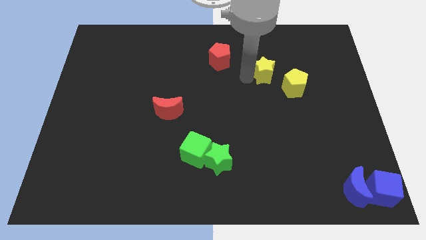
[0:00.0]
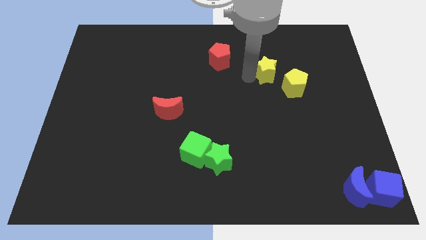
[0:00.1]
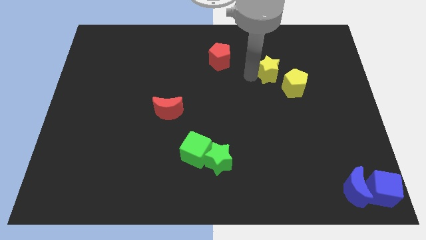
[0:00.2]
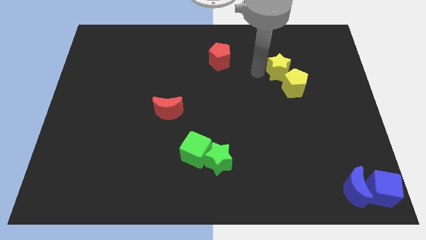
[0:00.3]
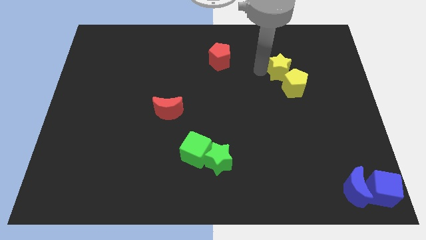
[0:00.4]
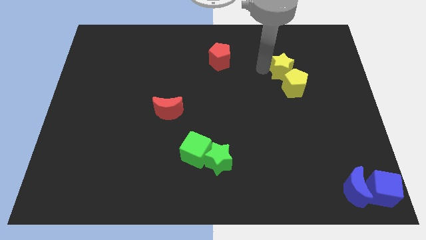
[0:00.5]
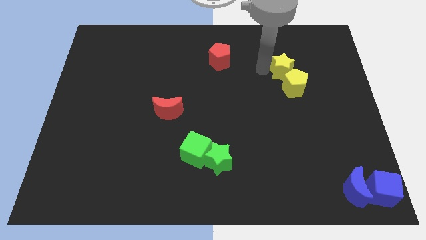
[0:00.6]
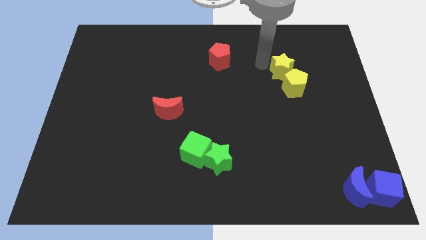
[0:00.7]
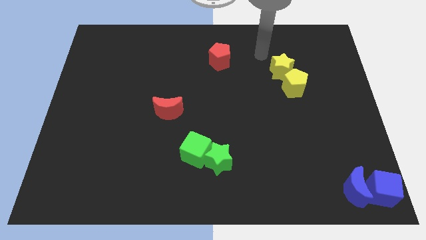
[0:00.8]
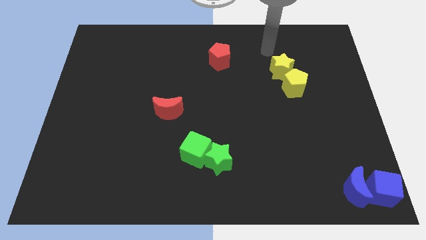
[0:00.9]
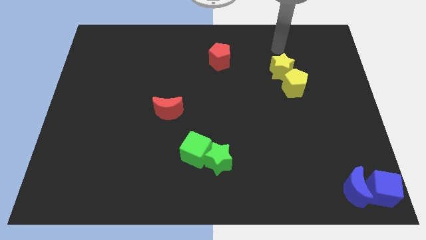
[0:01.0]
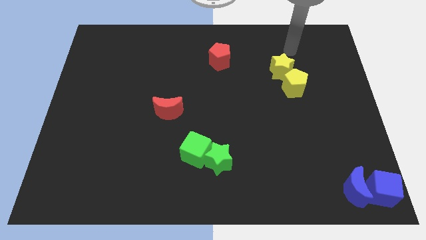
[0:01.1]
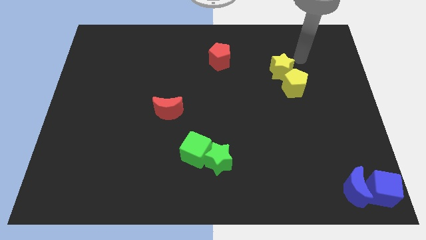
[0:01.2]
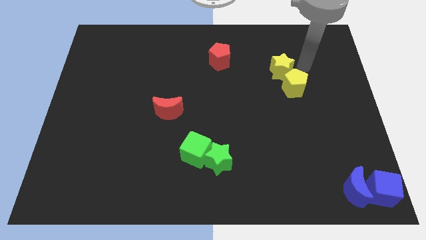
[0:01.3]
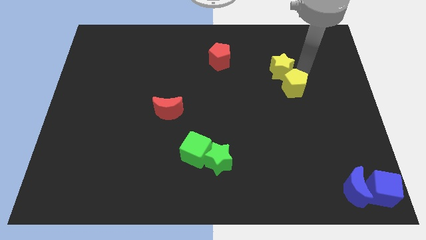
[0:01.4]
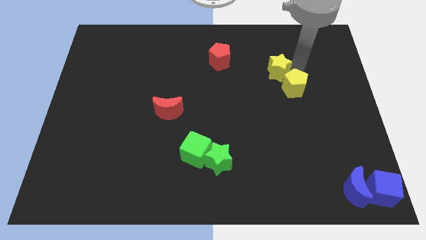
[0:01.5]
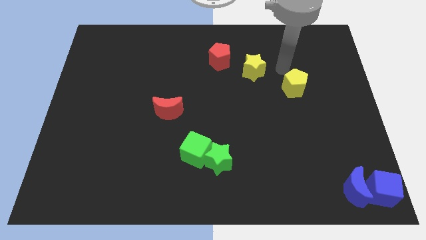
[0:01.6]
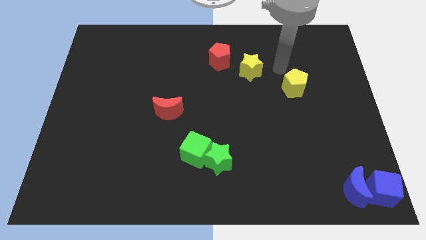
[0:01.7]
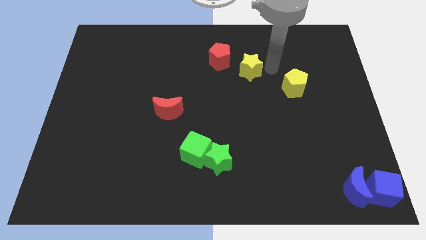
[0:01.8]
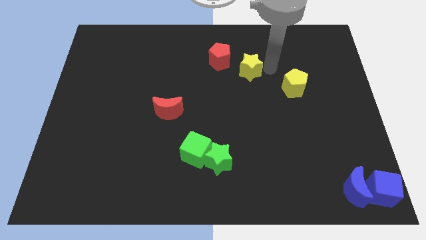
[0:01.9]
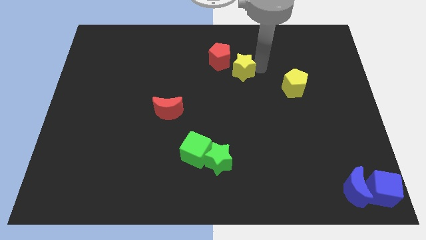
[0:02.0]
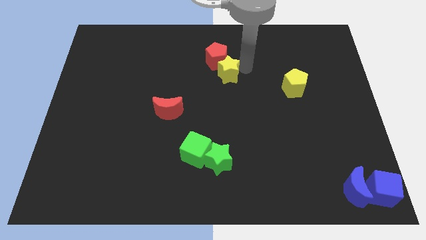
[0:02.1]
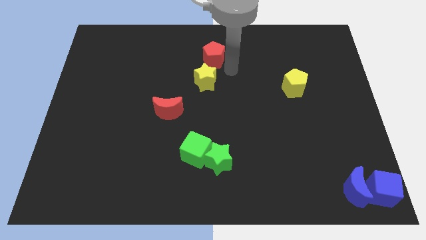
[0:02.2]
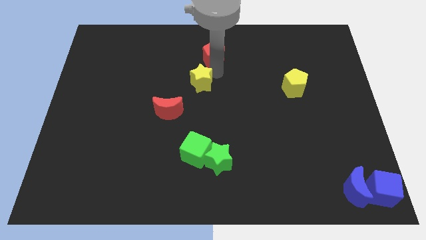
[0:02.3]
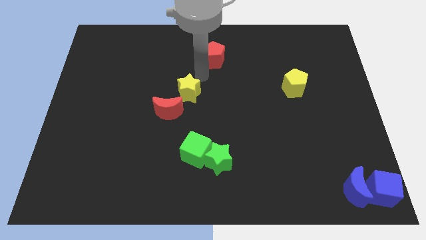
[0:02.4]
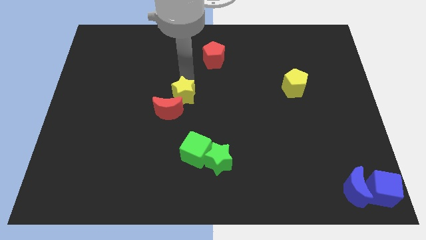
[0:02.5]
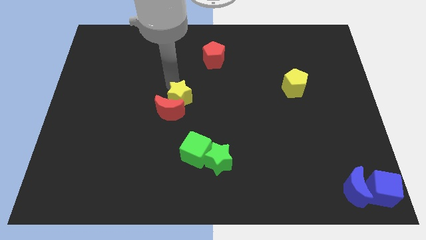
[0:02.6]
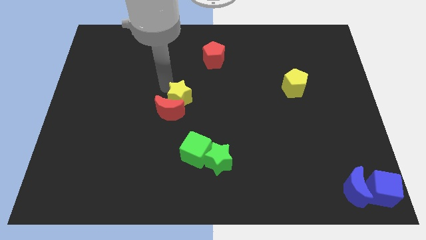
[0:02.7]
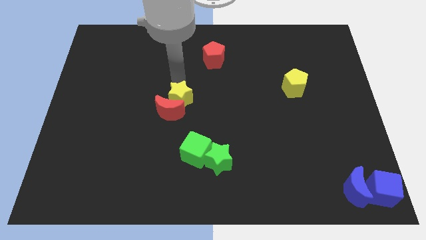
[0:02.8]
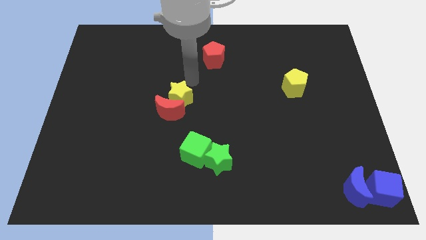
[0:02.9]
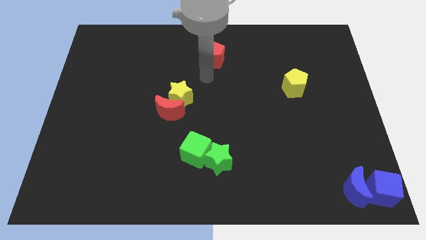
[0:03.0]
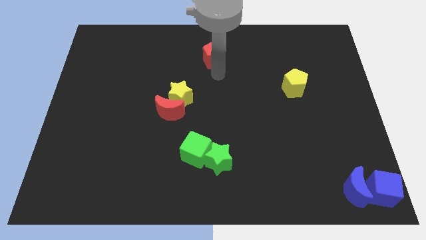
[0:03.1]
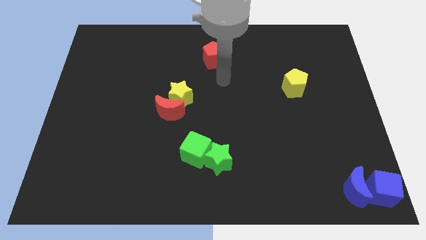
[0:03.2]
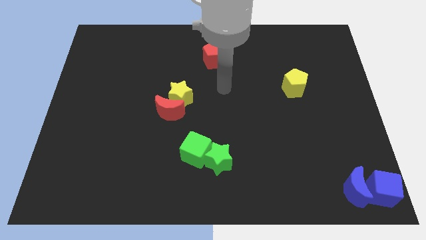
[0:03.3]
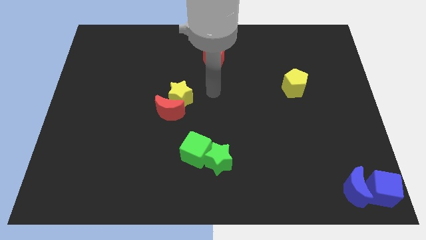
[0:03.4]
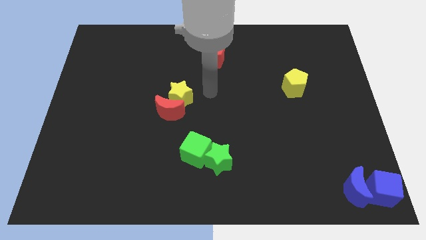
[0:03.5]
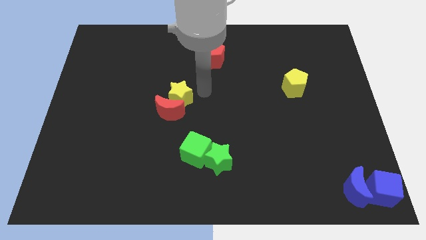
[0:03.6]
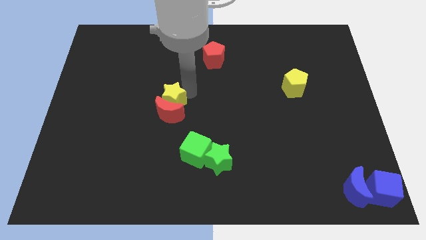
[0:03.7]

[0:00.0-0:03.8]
place yellow star to the top of red moon

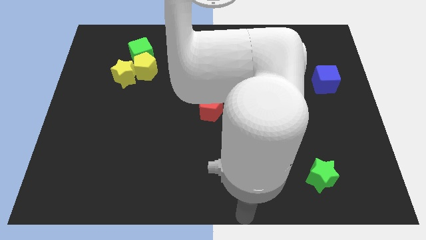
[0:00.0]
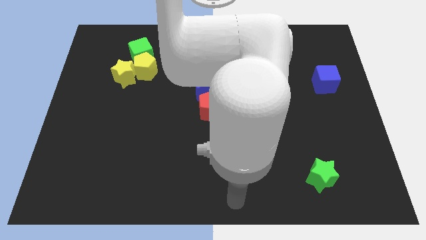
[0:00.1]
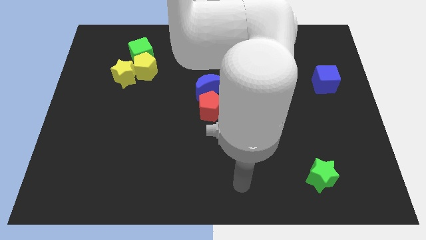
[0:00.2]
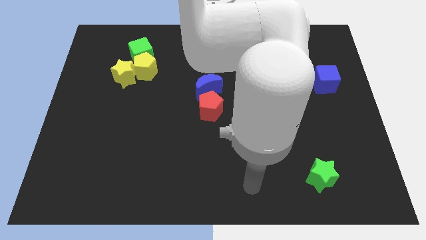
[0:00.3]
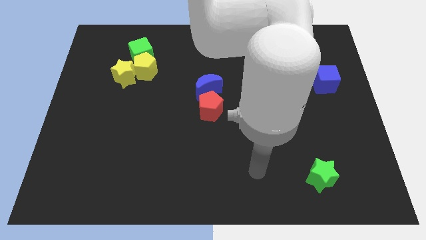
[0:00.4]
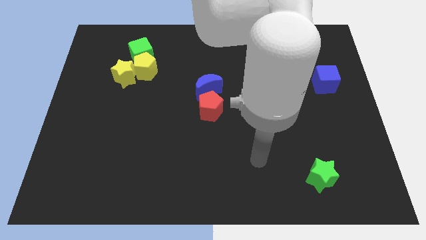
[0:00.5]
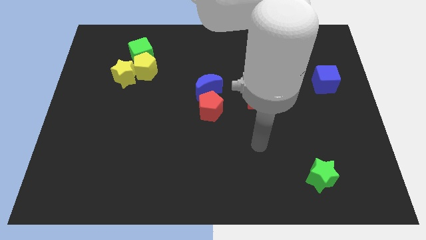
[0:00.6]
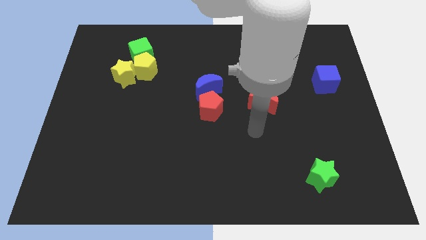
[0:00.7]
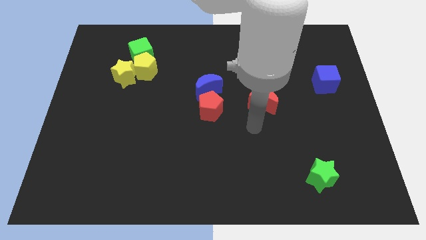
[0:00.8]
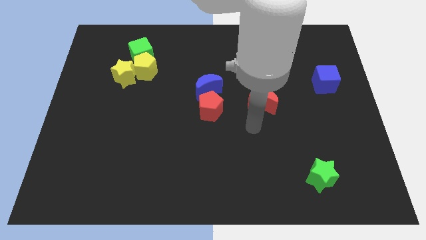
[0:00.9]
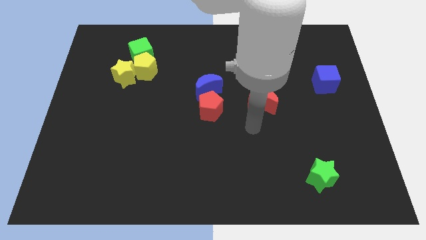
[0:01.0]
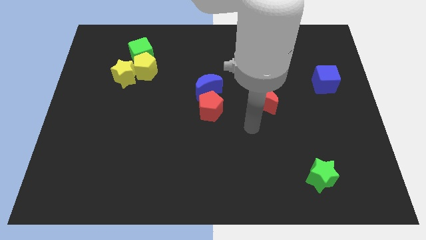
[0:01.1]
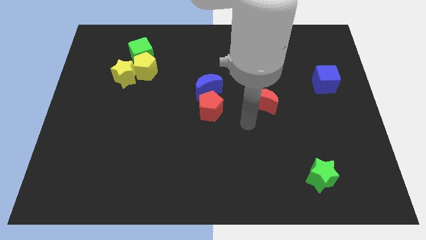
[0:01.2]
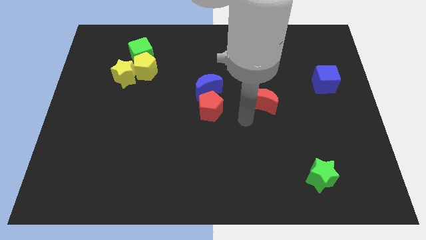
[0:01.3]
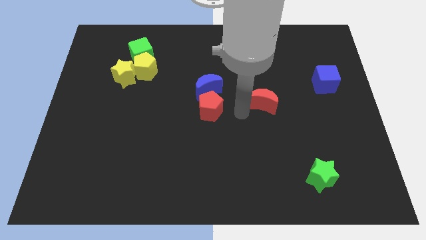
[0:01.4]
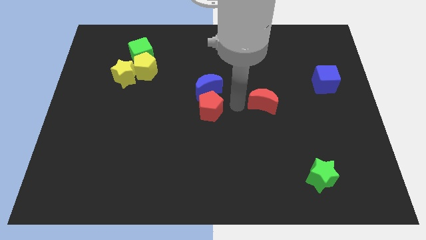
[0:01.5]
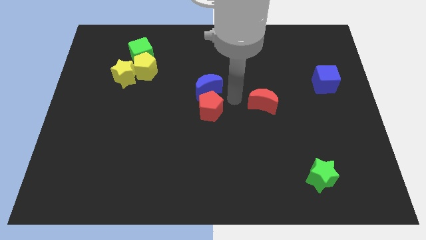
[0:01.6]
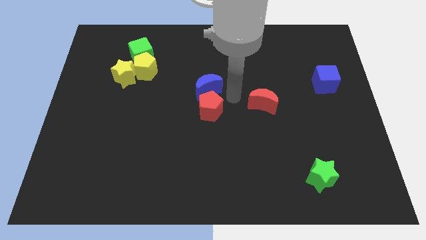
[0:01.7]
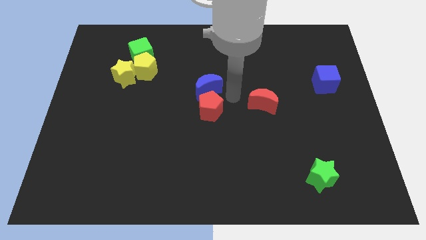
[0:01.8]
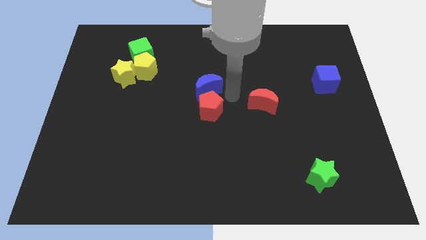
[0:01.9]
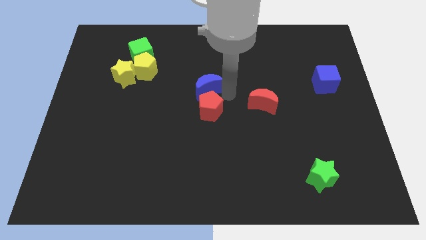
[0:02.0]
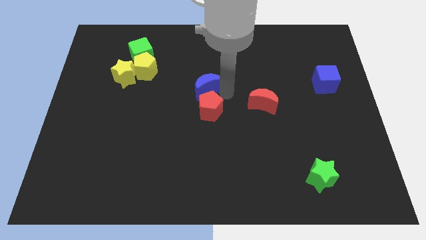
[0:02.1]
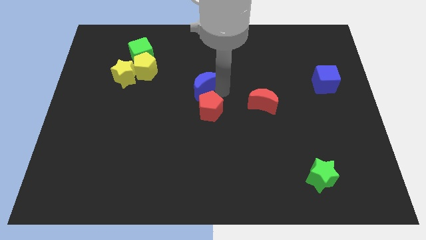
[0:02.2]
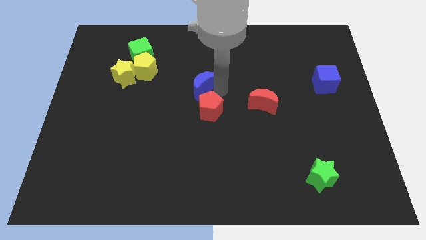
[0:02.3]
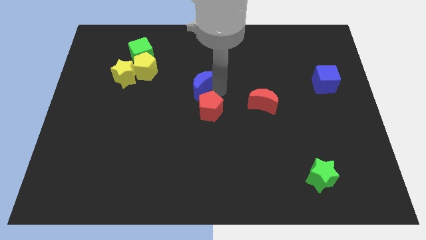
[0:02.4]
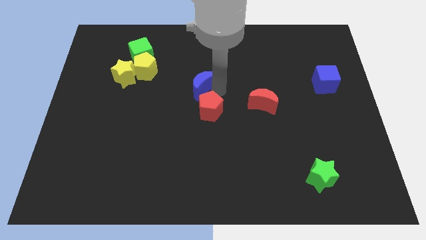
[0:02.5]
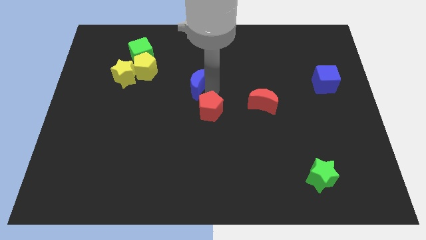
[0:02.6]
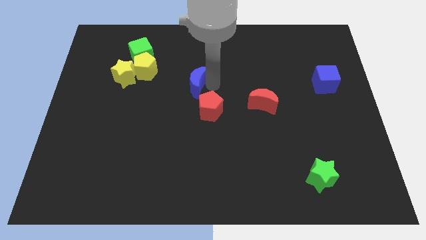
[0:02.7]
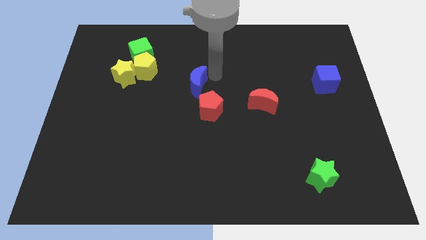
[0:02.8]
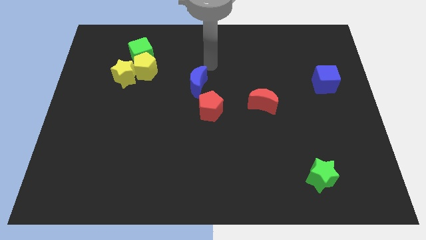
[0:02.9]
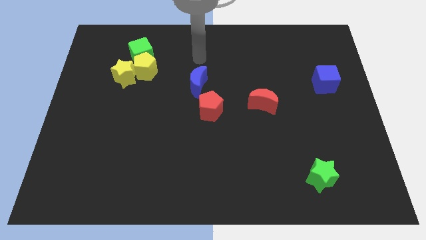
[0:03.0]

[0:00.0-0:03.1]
move the blue crescent slightly

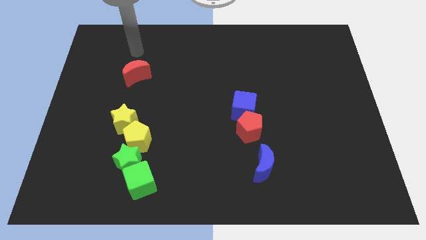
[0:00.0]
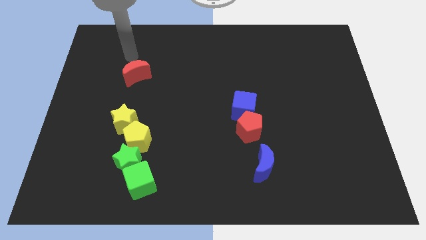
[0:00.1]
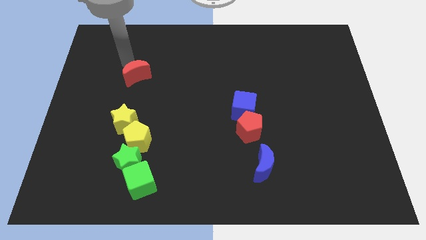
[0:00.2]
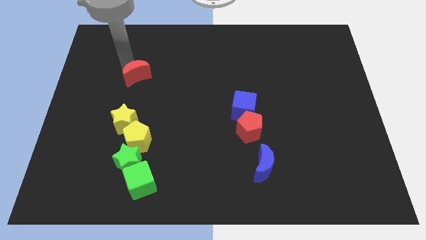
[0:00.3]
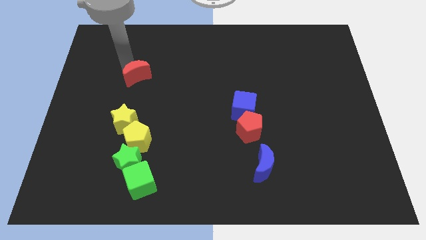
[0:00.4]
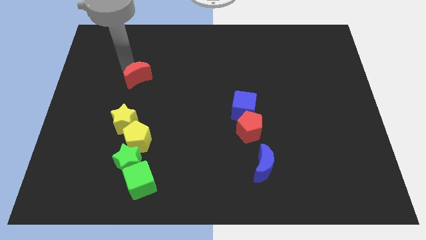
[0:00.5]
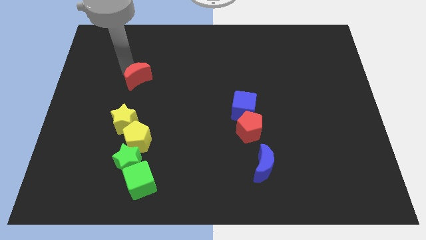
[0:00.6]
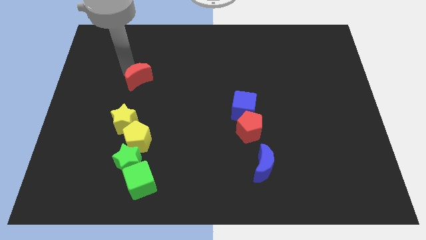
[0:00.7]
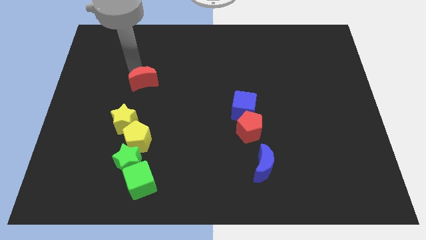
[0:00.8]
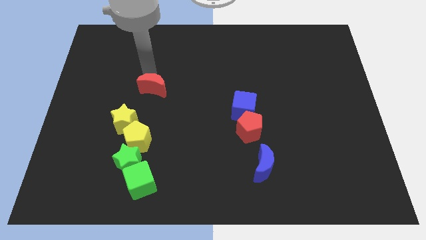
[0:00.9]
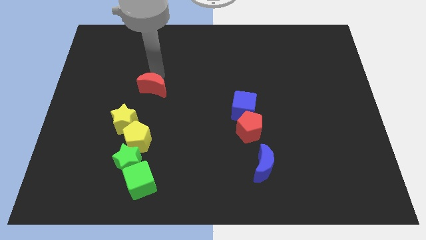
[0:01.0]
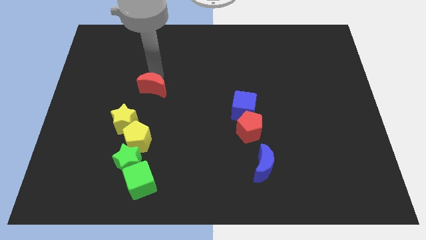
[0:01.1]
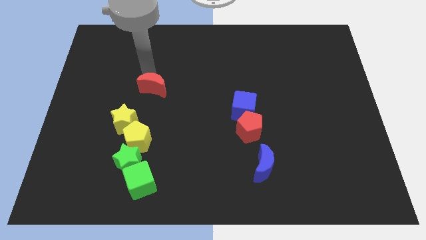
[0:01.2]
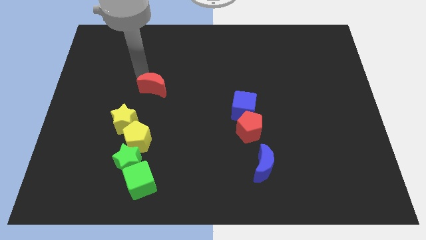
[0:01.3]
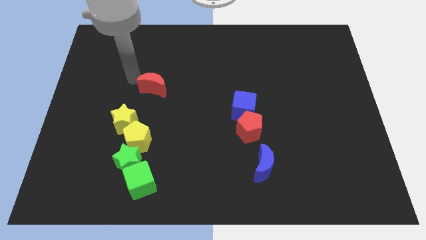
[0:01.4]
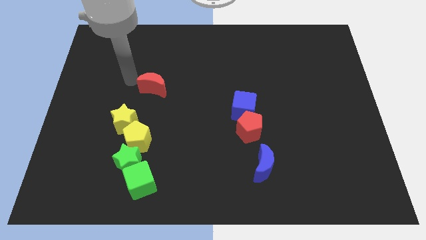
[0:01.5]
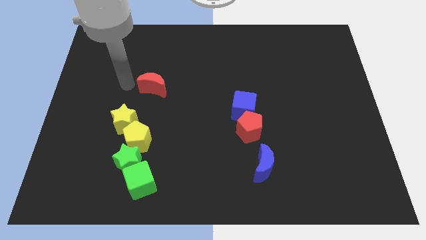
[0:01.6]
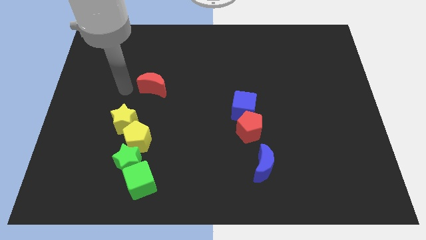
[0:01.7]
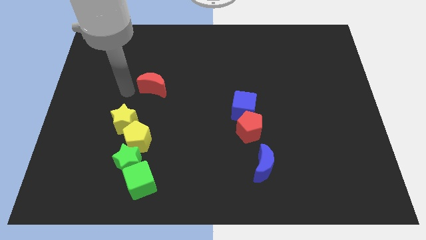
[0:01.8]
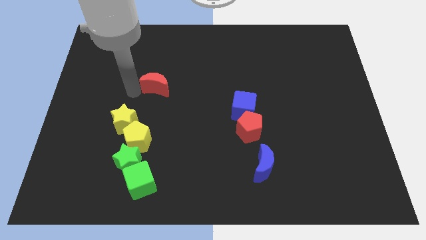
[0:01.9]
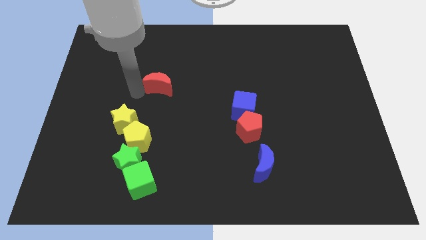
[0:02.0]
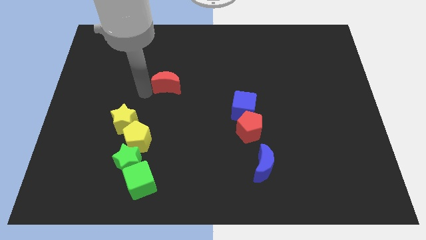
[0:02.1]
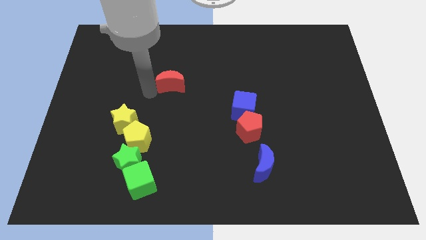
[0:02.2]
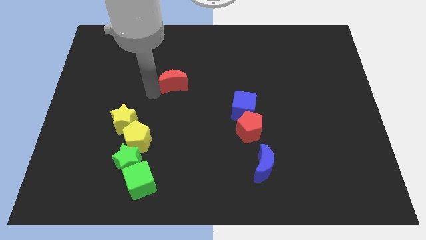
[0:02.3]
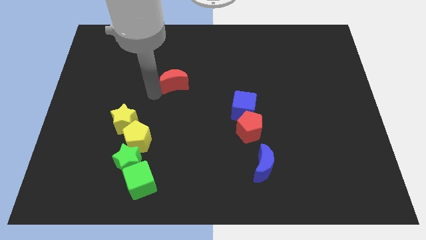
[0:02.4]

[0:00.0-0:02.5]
place the red moon diagonally to the yellow star
